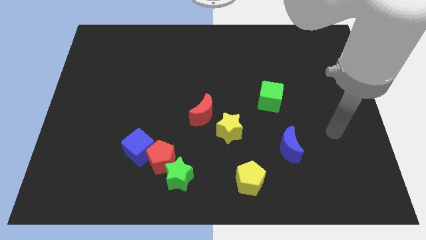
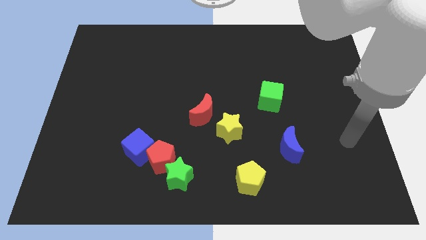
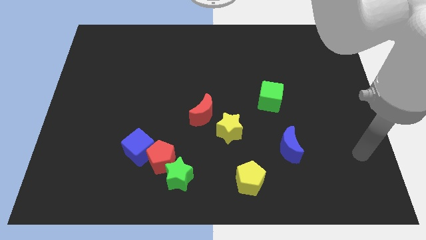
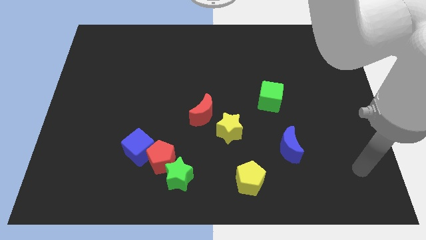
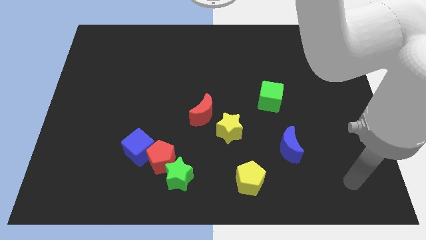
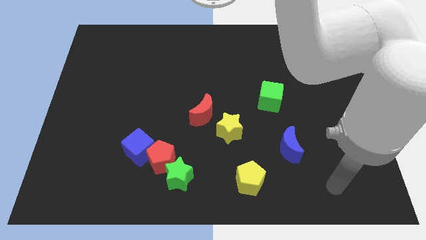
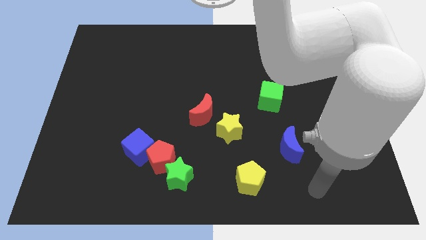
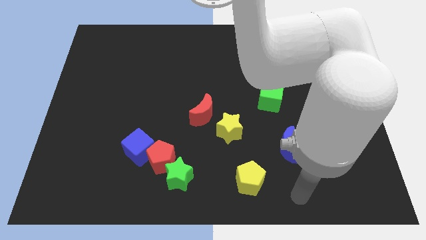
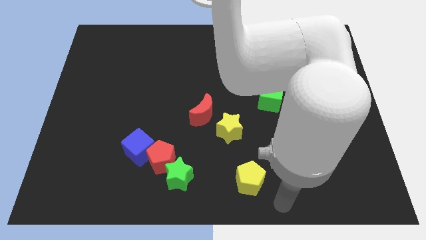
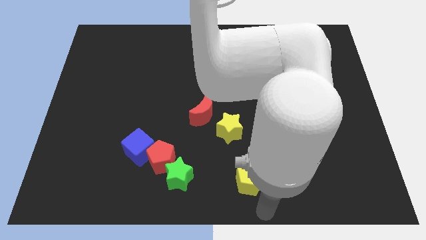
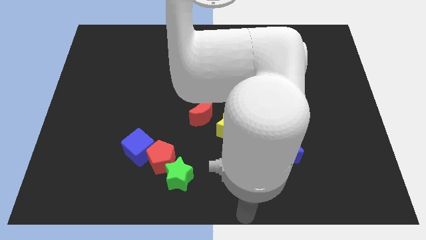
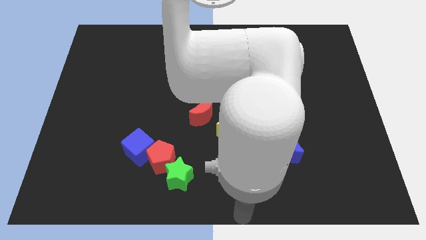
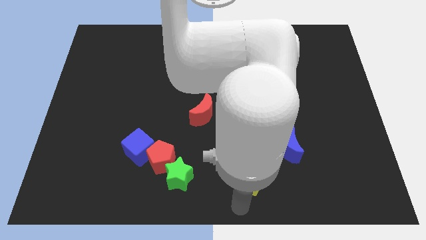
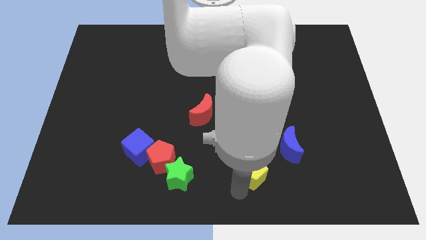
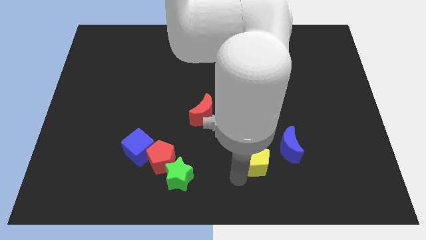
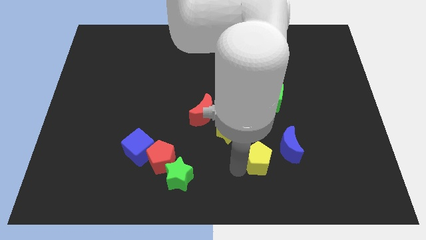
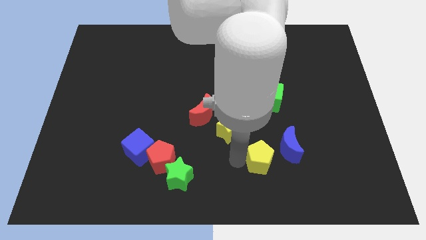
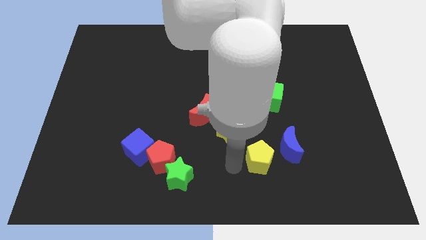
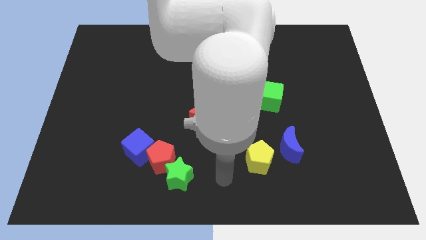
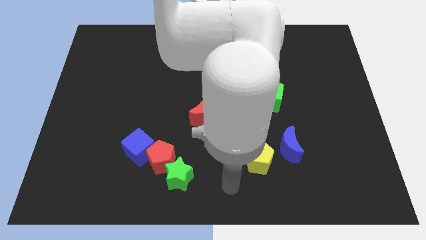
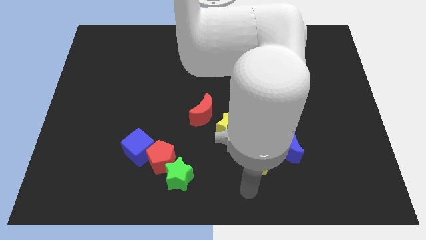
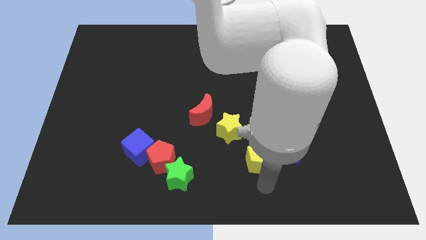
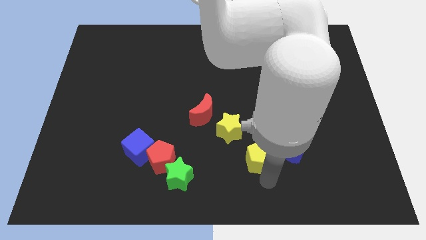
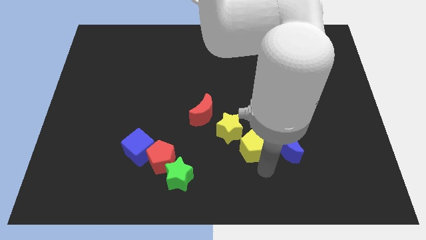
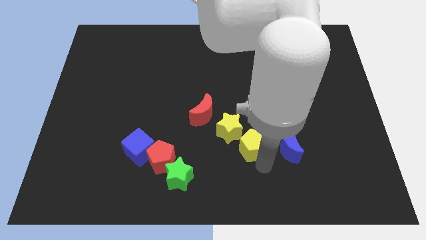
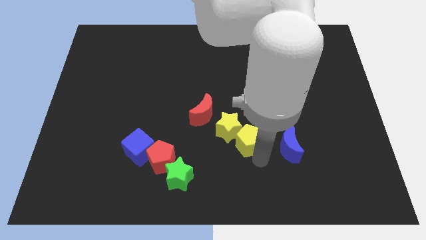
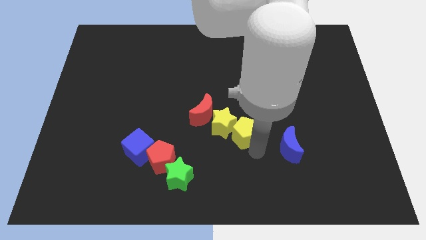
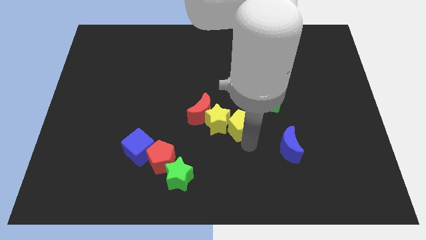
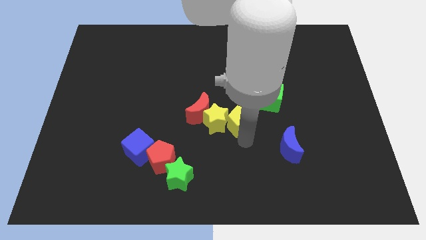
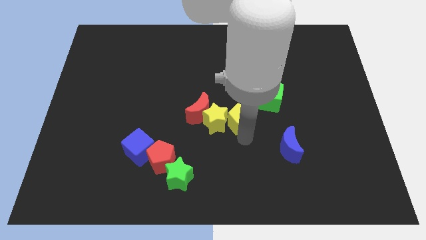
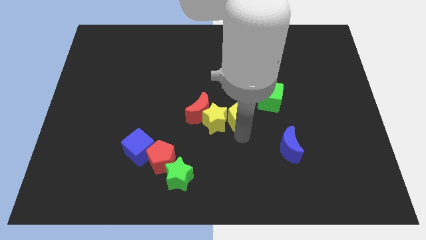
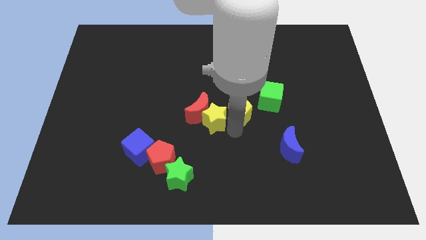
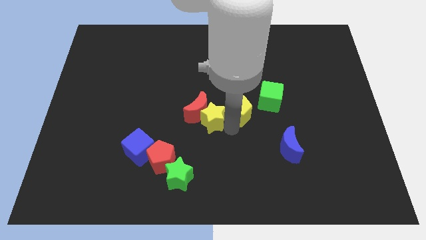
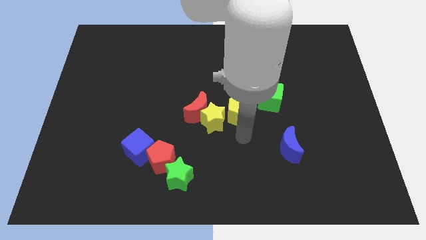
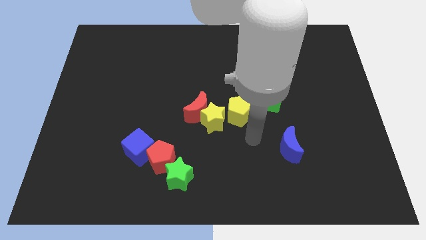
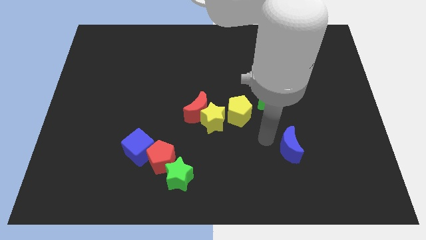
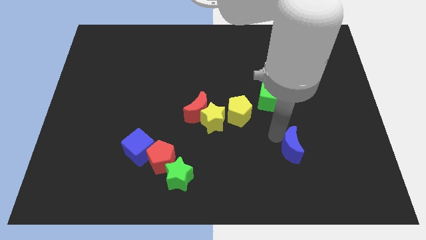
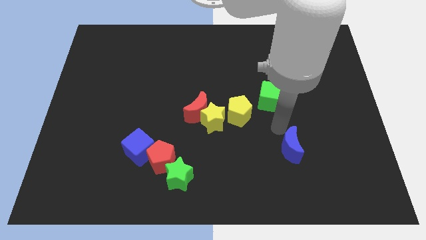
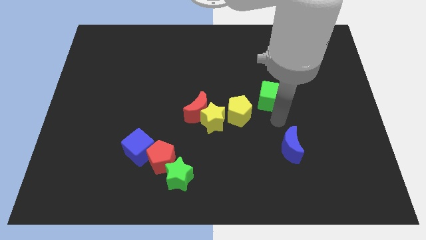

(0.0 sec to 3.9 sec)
push the yellow pentagon in between the yellow star and green cube

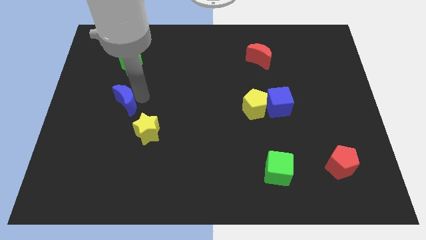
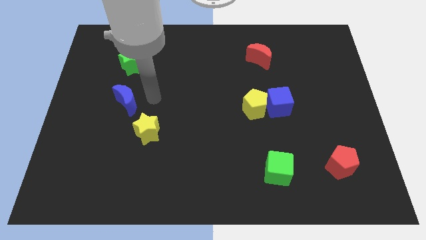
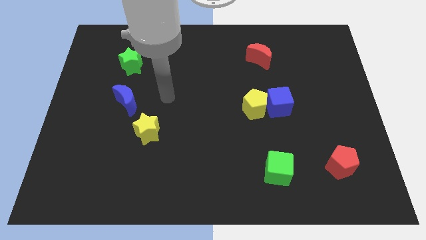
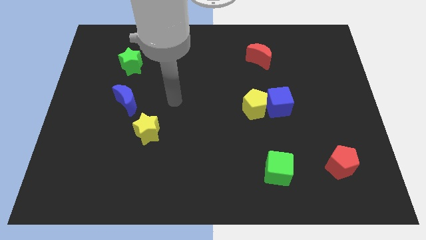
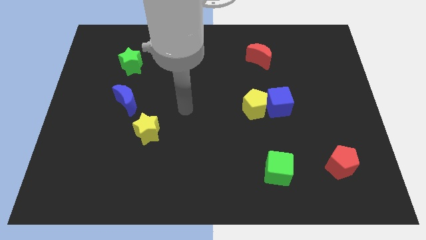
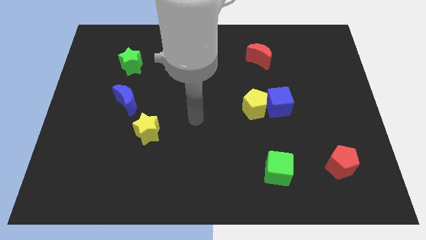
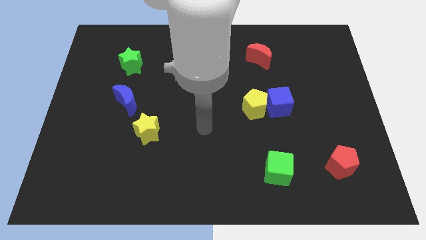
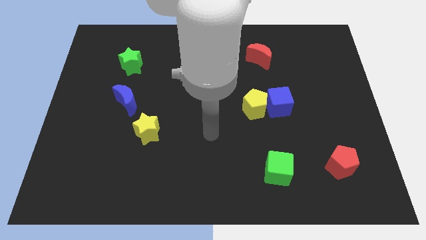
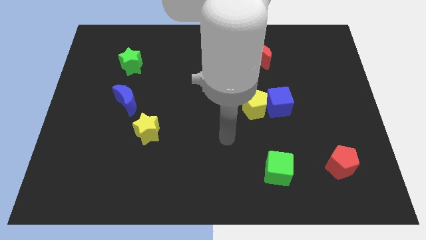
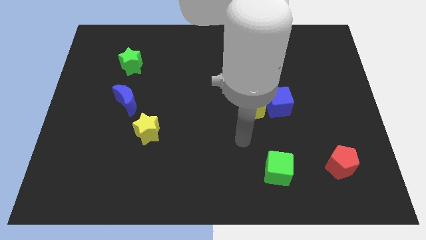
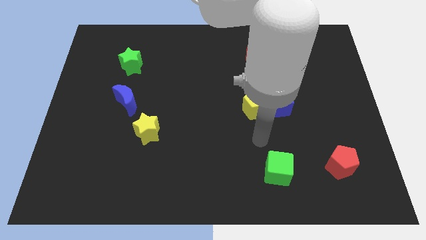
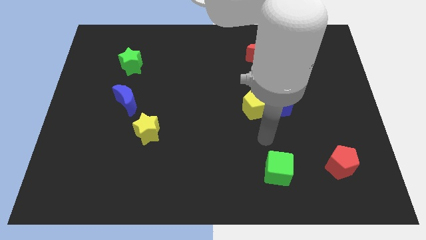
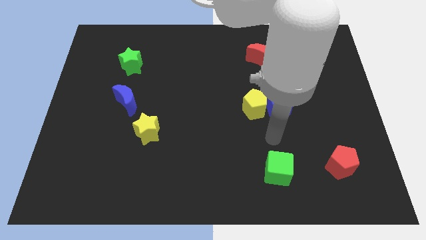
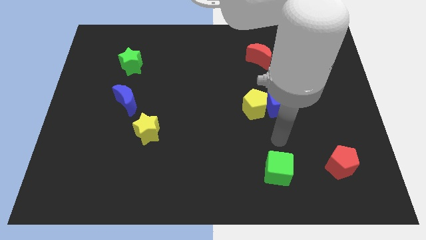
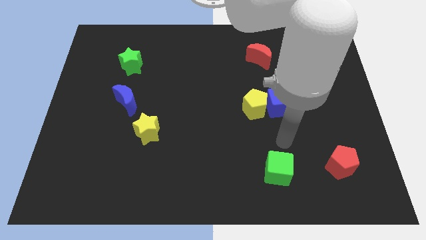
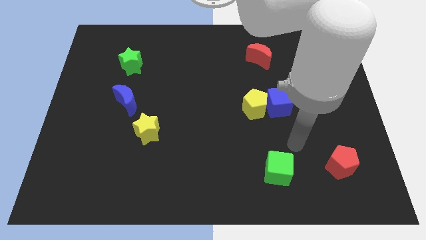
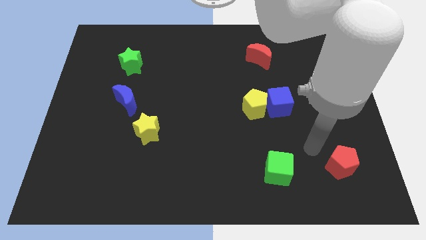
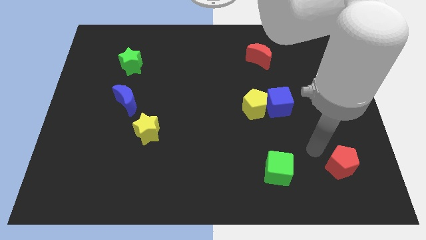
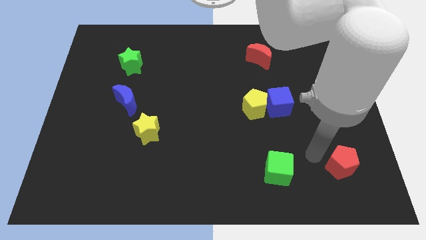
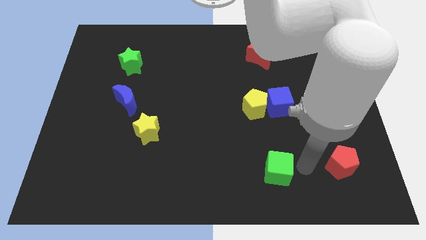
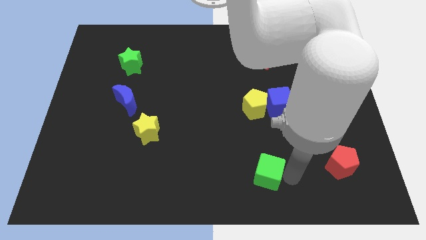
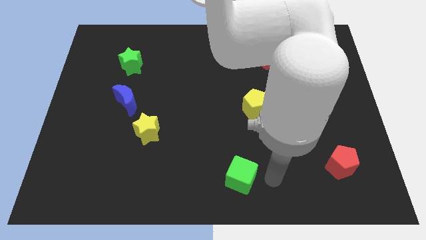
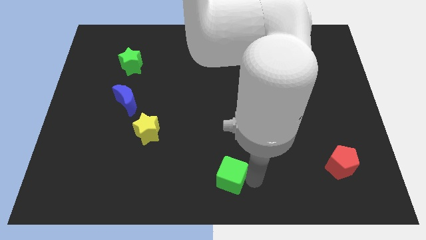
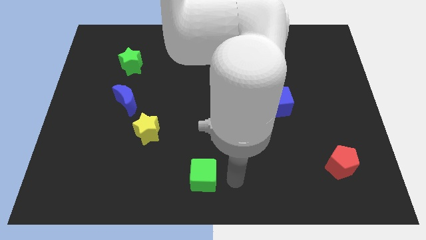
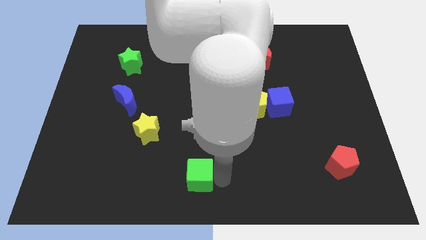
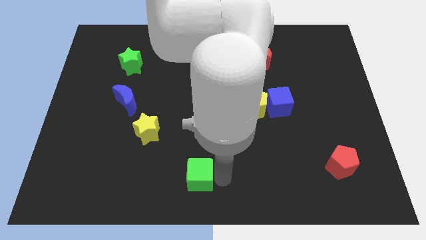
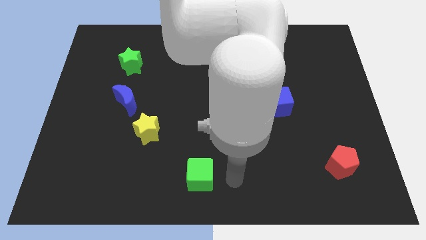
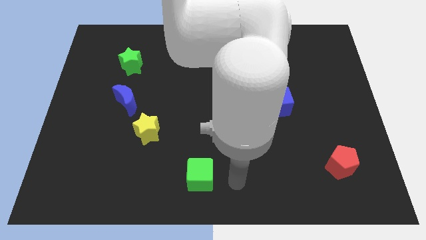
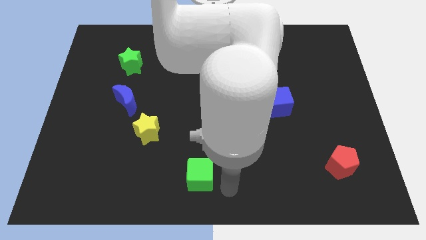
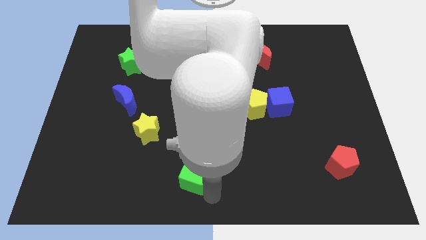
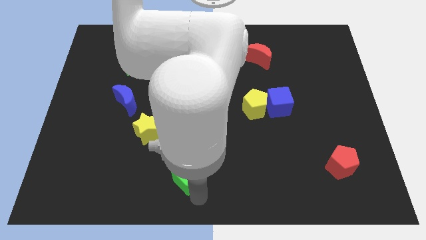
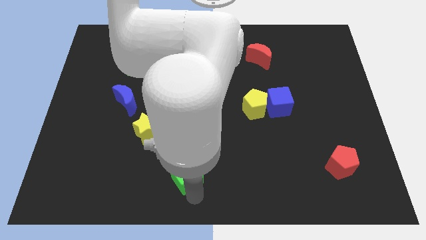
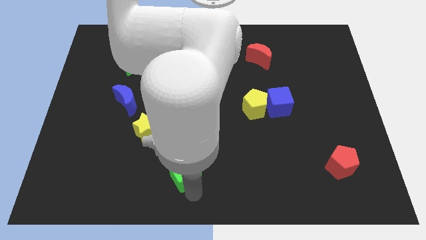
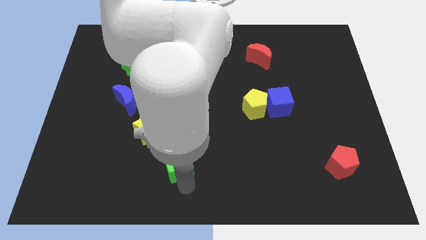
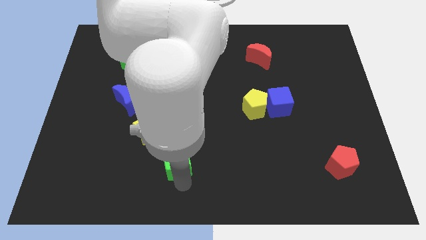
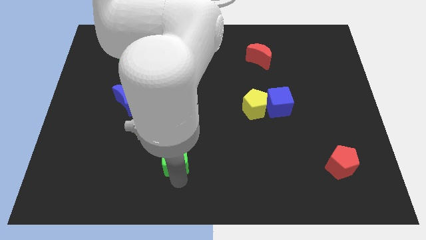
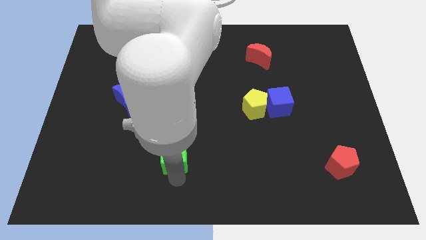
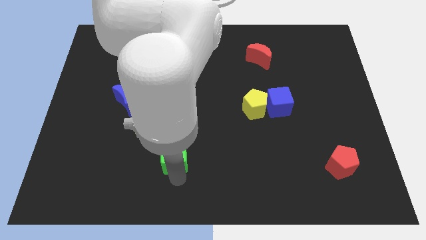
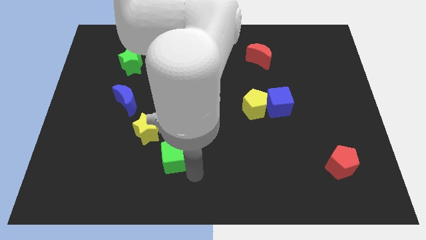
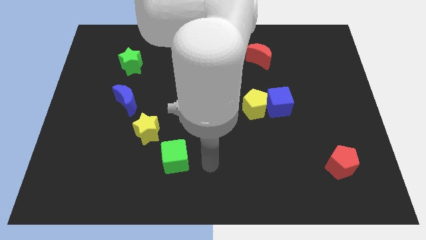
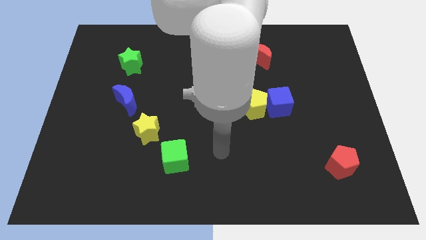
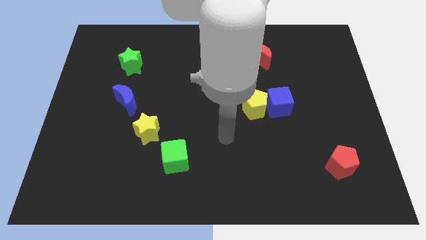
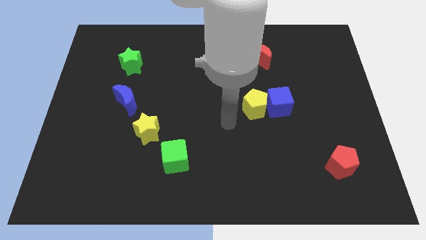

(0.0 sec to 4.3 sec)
push the green cube towards the yellow star

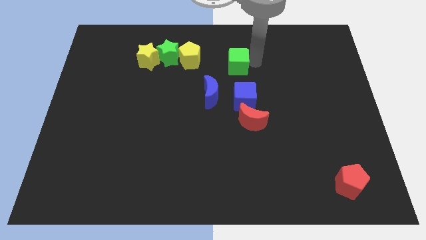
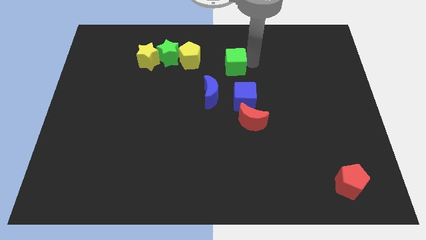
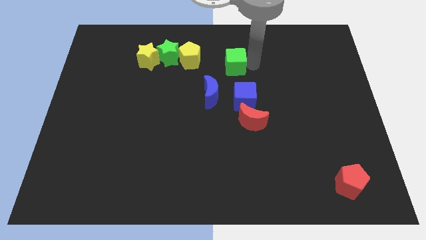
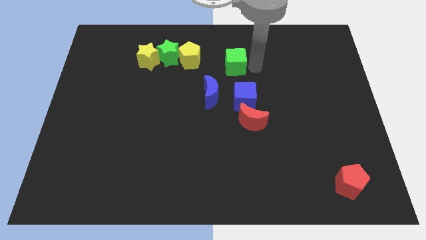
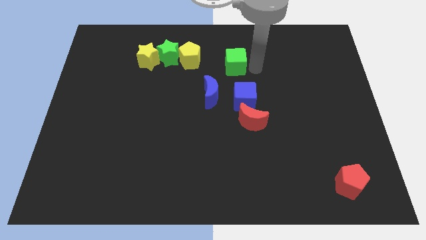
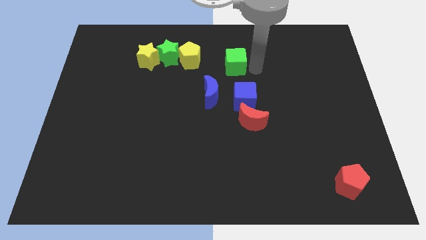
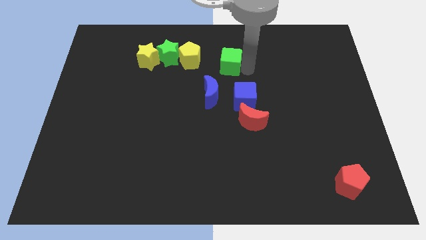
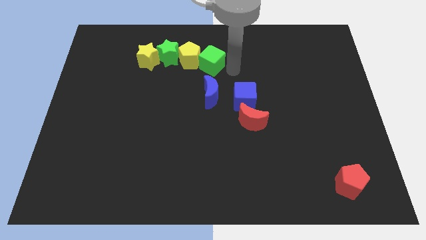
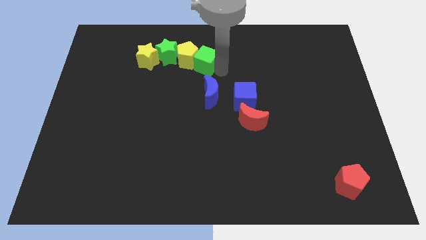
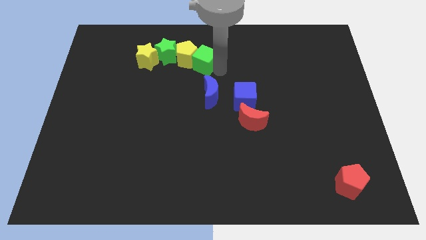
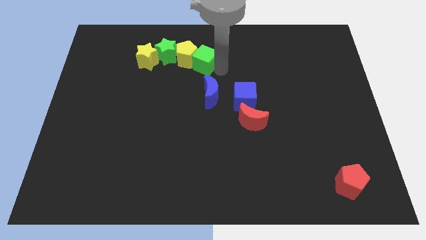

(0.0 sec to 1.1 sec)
move the green cube into the yellow pentagon
